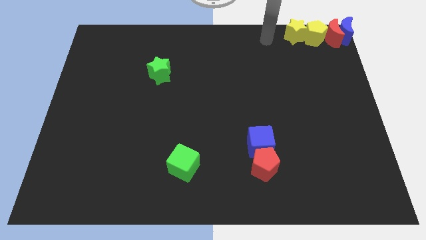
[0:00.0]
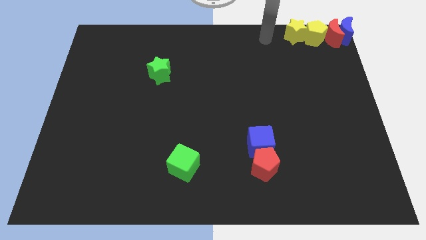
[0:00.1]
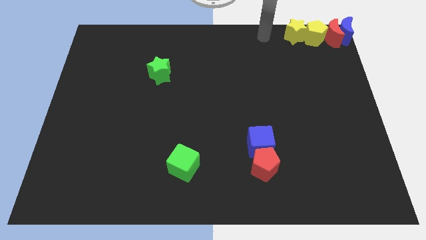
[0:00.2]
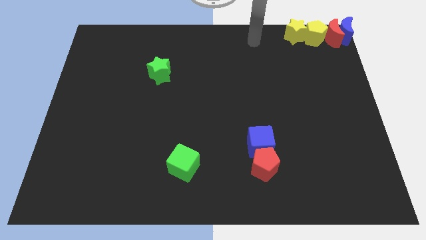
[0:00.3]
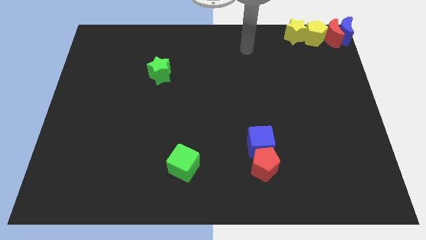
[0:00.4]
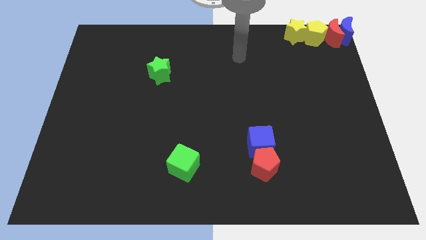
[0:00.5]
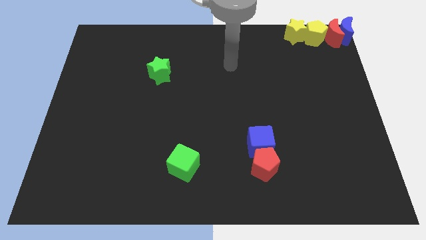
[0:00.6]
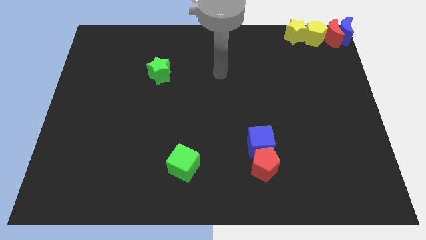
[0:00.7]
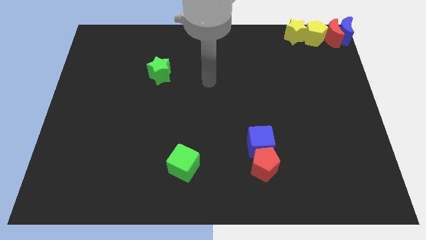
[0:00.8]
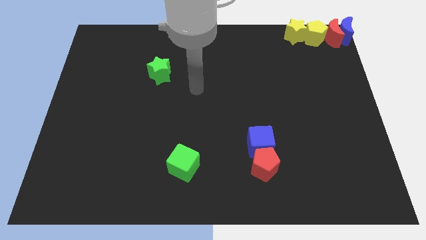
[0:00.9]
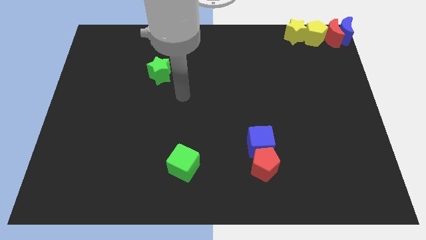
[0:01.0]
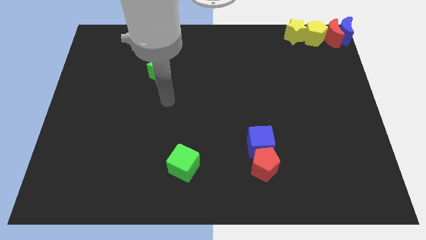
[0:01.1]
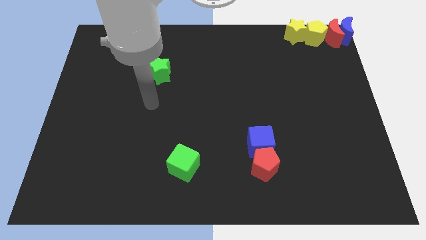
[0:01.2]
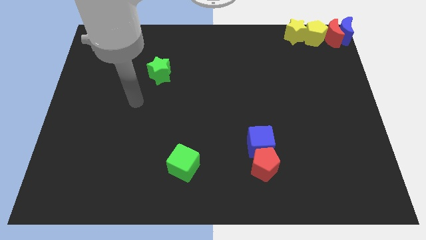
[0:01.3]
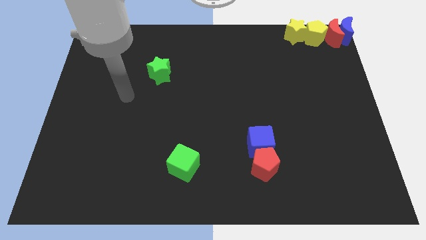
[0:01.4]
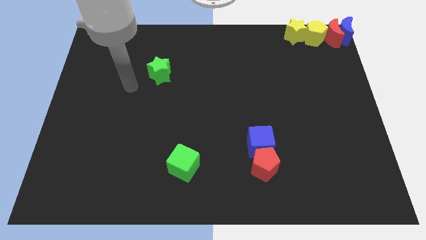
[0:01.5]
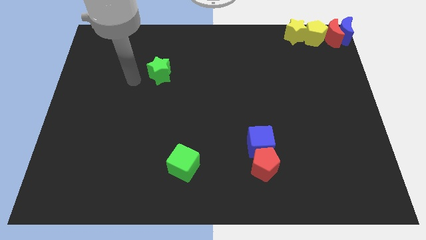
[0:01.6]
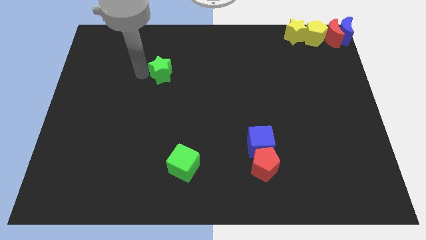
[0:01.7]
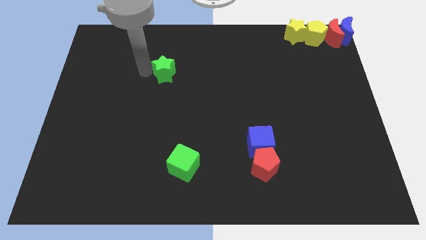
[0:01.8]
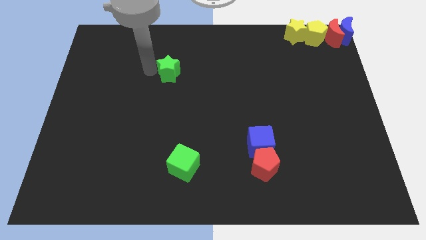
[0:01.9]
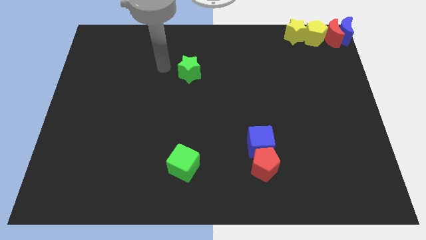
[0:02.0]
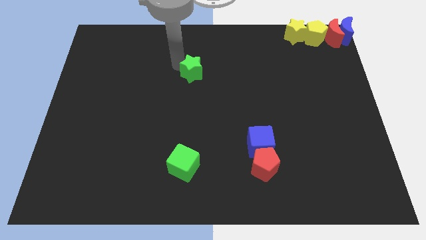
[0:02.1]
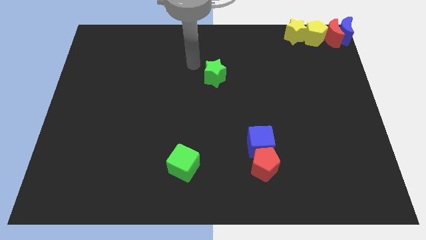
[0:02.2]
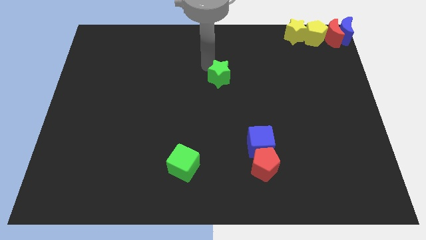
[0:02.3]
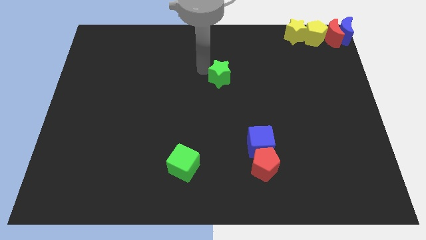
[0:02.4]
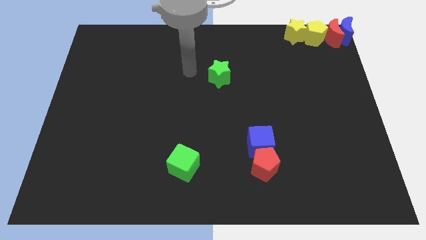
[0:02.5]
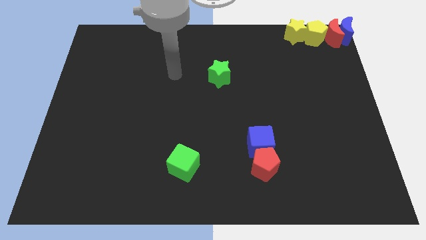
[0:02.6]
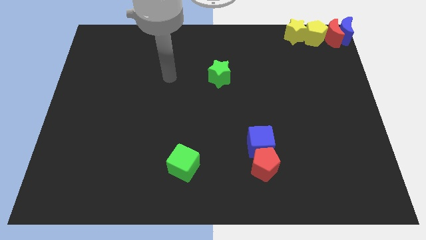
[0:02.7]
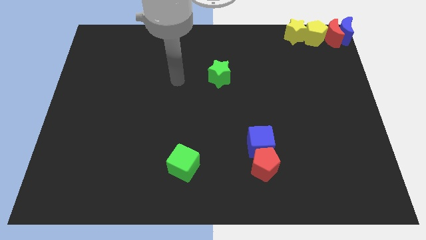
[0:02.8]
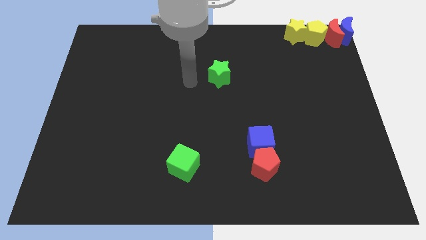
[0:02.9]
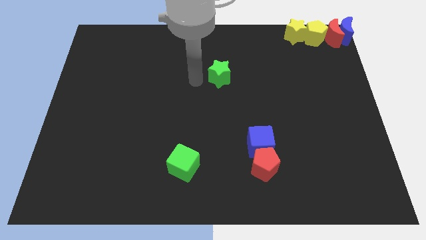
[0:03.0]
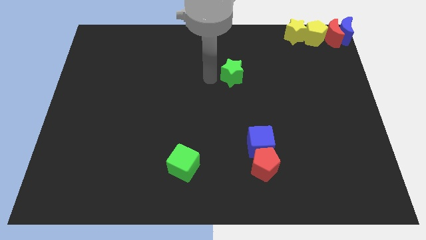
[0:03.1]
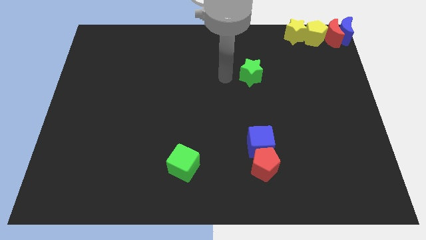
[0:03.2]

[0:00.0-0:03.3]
put the green star above the blue cube

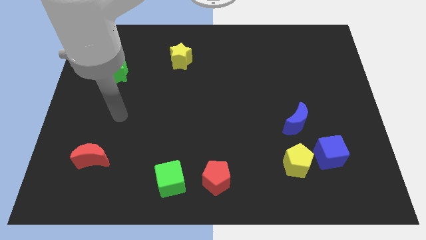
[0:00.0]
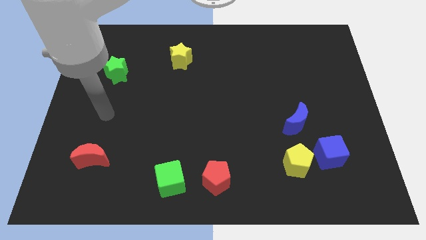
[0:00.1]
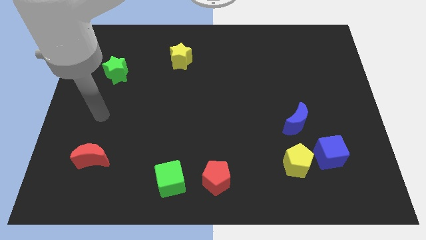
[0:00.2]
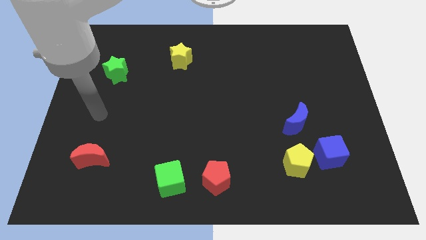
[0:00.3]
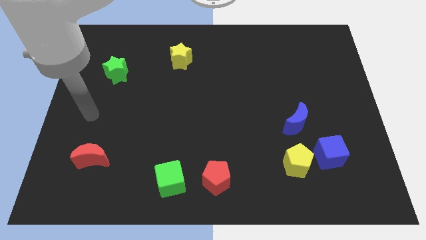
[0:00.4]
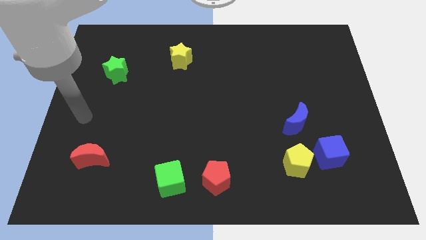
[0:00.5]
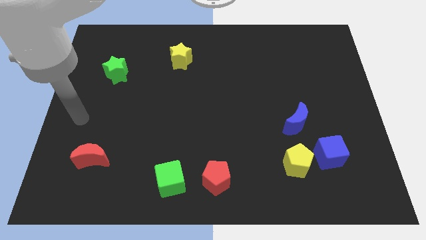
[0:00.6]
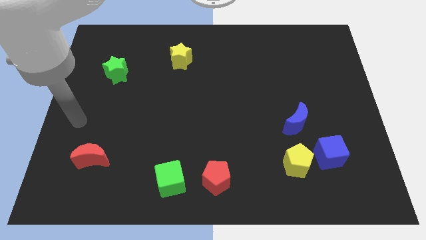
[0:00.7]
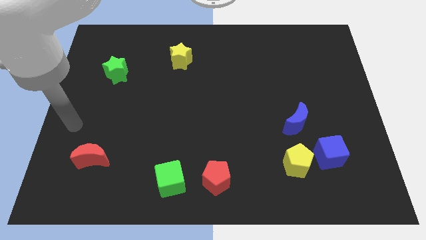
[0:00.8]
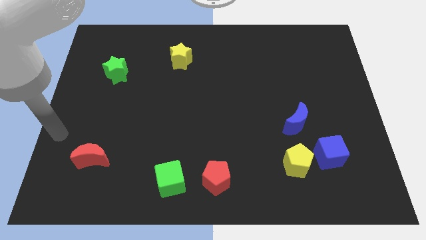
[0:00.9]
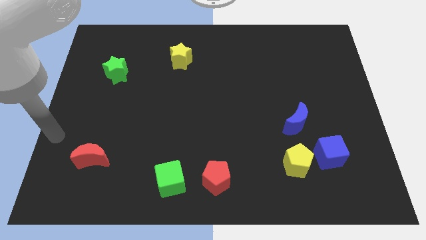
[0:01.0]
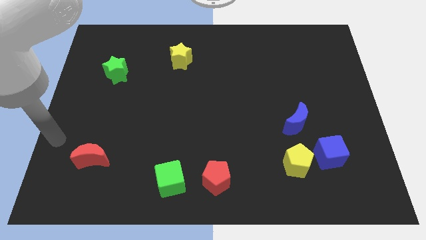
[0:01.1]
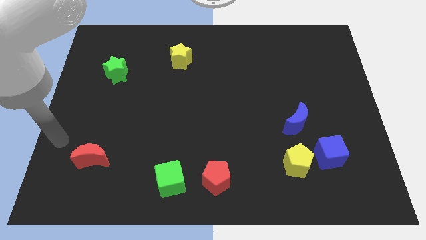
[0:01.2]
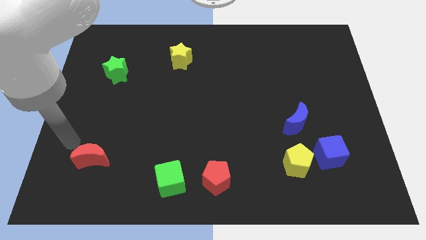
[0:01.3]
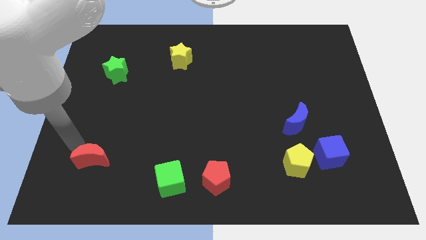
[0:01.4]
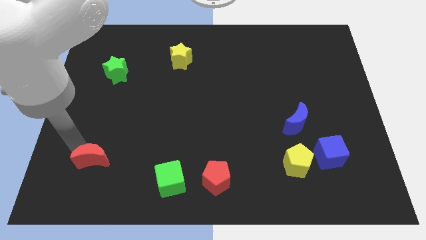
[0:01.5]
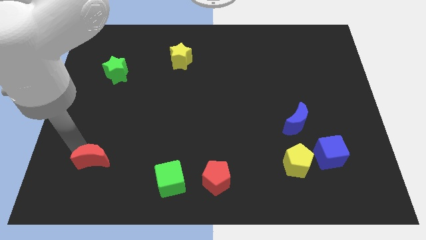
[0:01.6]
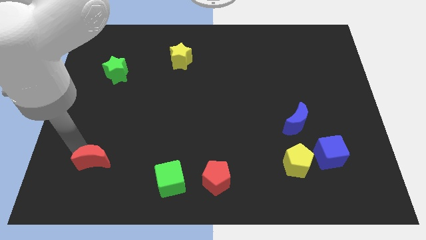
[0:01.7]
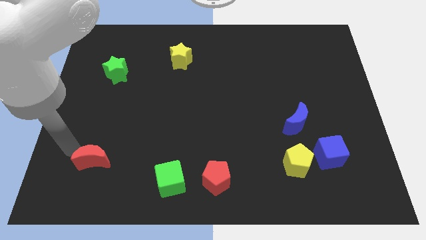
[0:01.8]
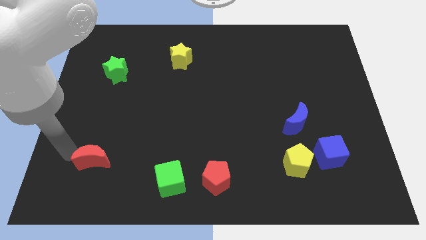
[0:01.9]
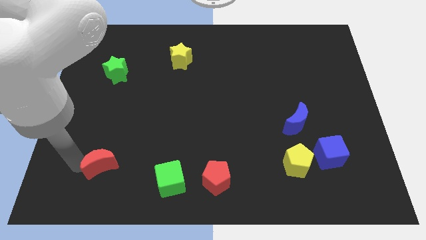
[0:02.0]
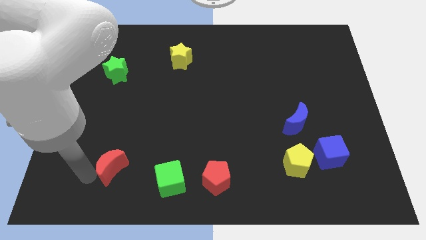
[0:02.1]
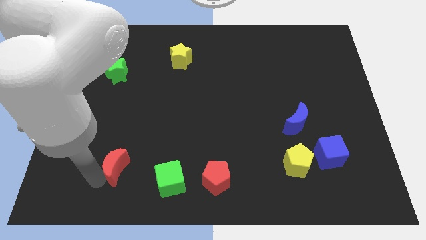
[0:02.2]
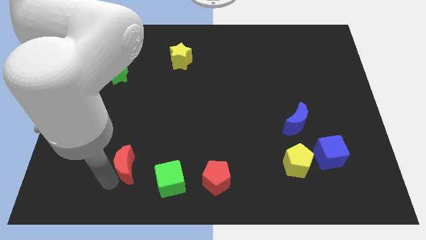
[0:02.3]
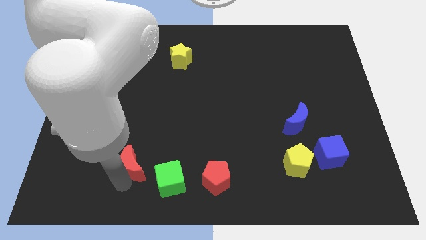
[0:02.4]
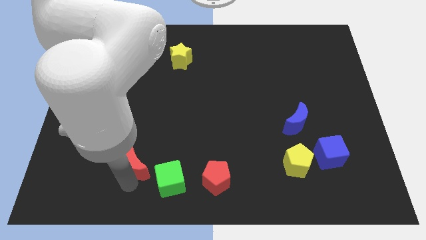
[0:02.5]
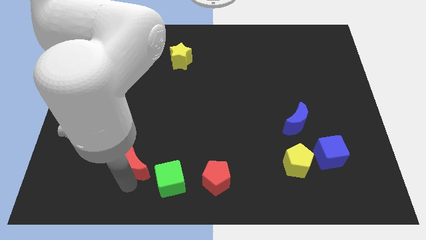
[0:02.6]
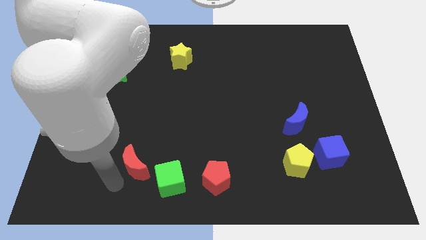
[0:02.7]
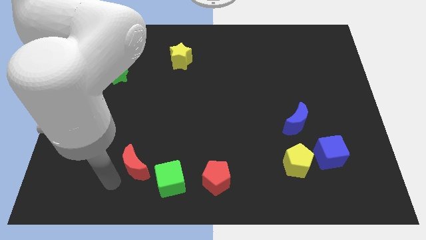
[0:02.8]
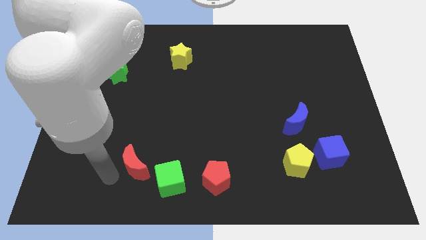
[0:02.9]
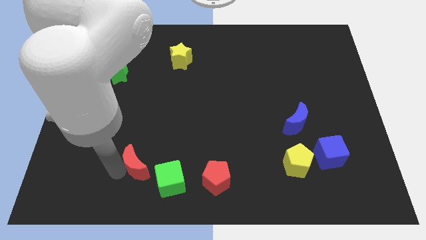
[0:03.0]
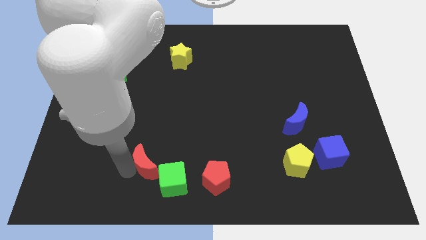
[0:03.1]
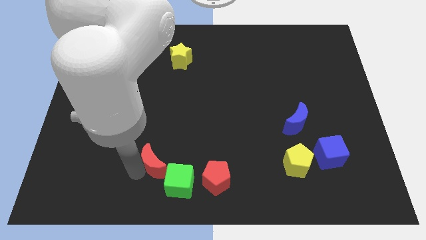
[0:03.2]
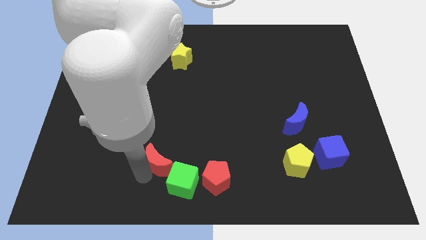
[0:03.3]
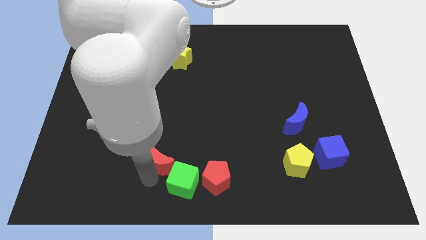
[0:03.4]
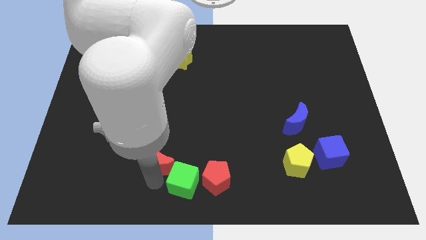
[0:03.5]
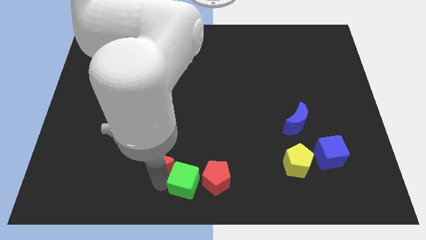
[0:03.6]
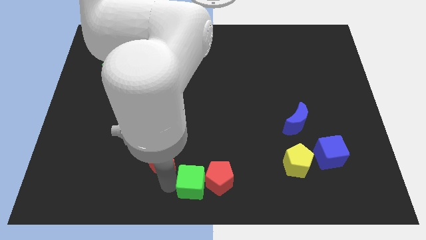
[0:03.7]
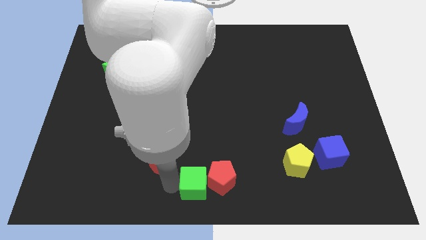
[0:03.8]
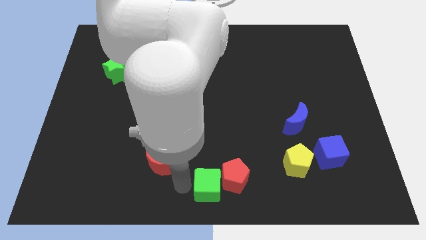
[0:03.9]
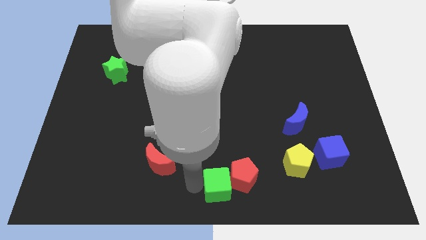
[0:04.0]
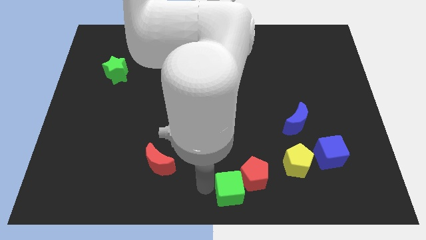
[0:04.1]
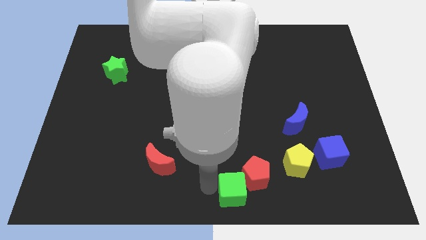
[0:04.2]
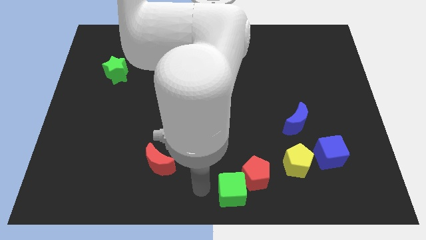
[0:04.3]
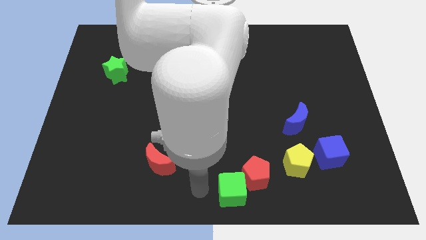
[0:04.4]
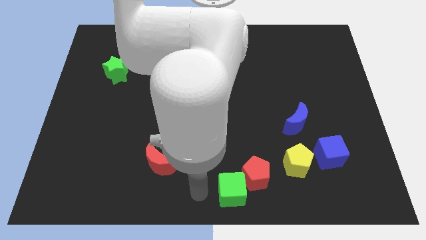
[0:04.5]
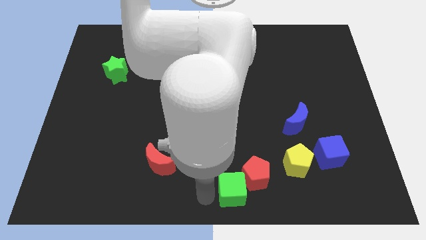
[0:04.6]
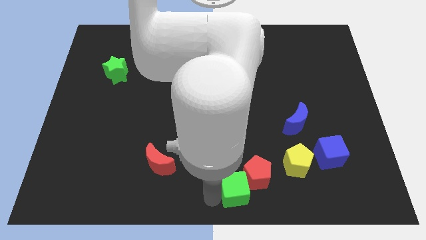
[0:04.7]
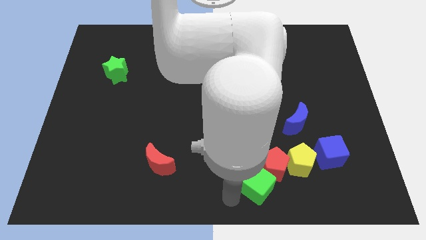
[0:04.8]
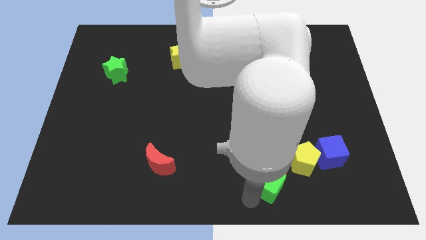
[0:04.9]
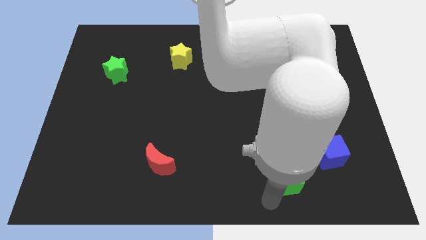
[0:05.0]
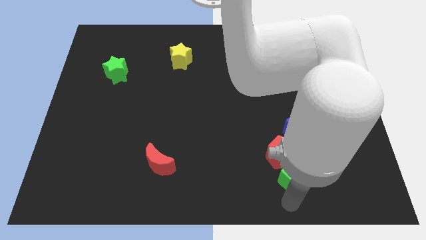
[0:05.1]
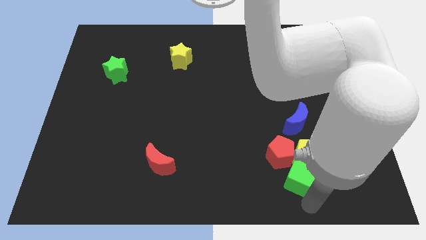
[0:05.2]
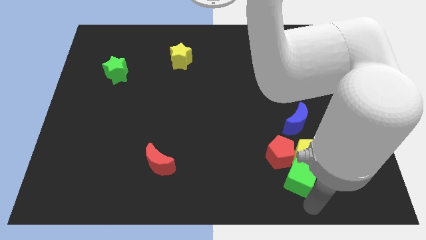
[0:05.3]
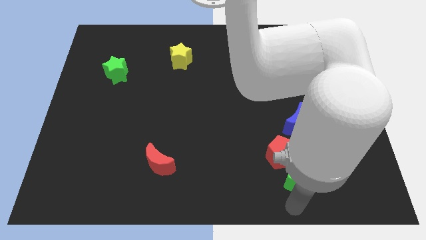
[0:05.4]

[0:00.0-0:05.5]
push the green cube and red pentagon into the yellow pentagon
